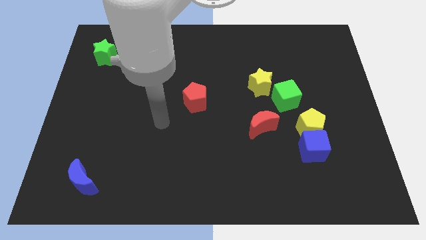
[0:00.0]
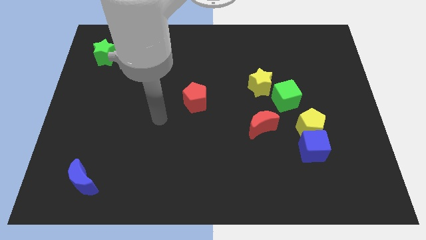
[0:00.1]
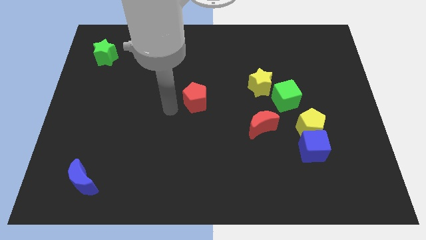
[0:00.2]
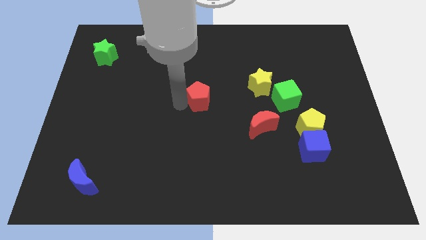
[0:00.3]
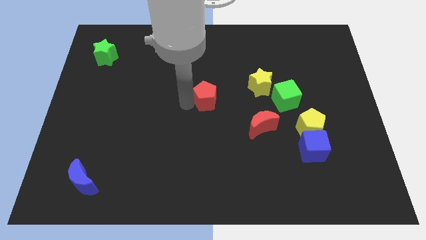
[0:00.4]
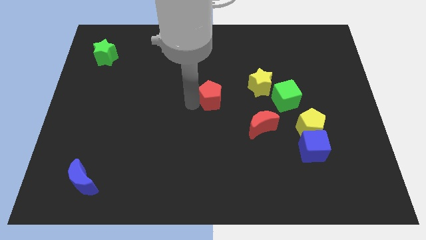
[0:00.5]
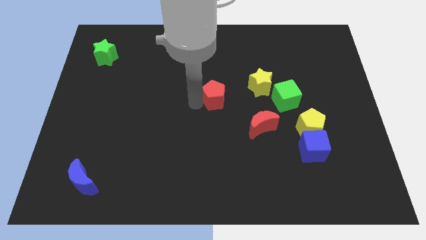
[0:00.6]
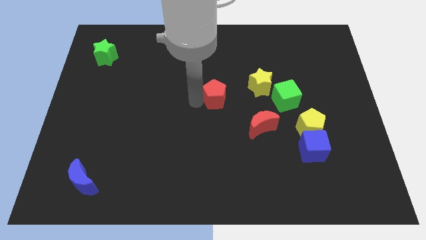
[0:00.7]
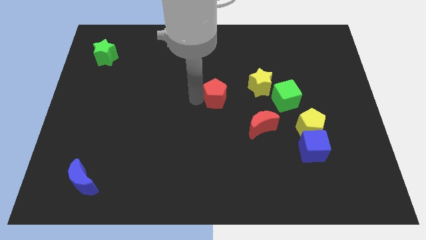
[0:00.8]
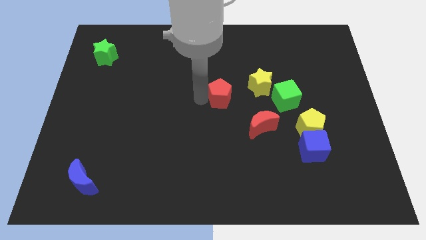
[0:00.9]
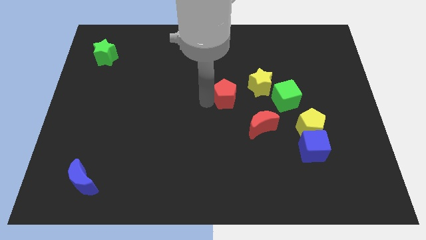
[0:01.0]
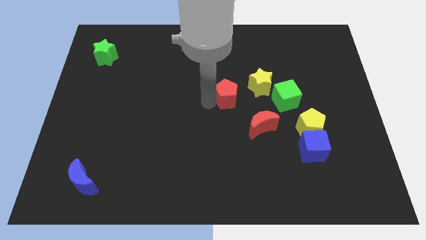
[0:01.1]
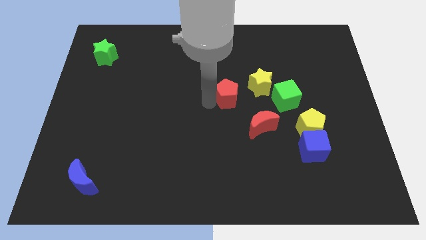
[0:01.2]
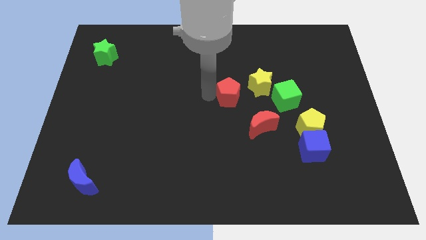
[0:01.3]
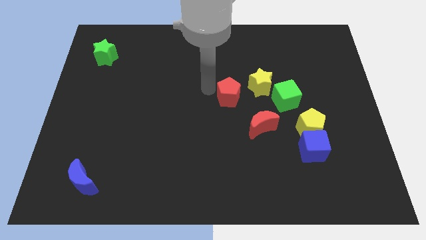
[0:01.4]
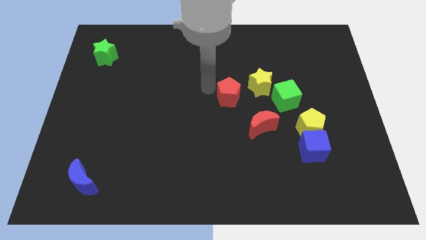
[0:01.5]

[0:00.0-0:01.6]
place the red pentagon to the left side of the yellow star

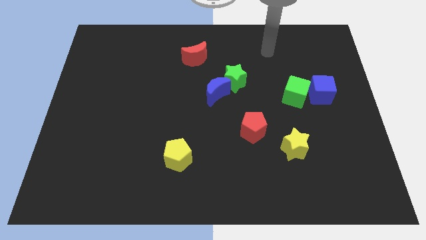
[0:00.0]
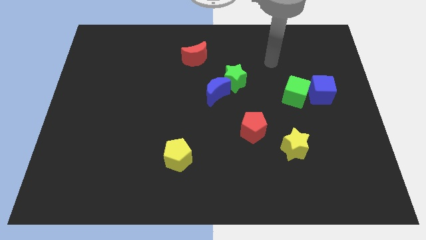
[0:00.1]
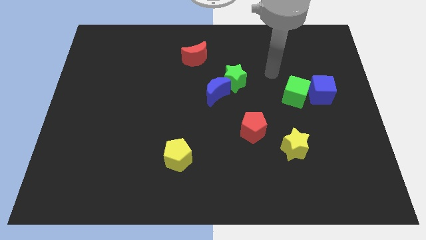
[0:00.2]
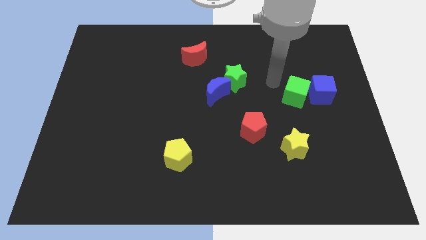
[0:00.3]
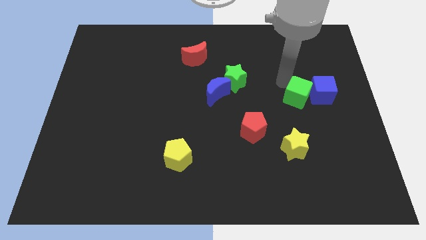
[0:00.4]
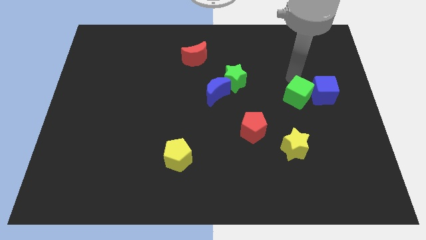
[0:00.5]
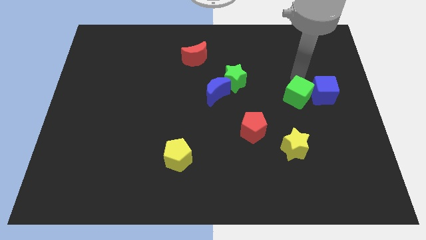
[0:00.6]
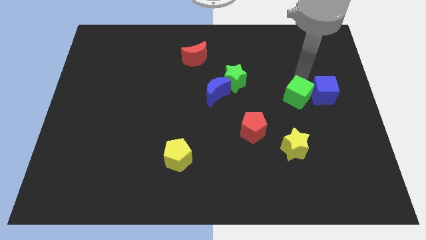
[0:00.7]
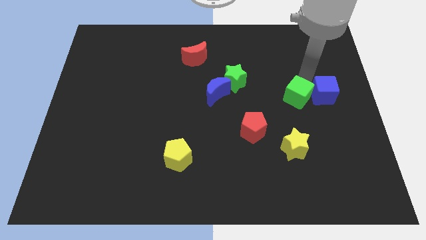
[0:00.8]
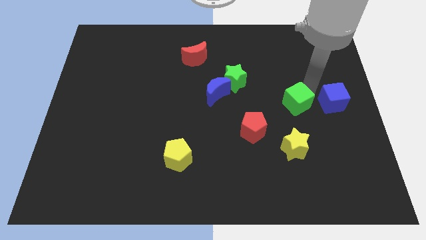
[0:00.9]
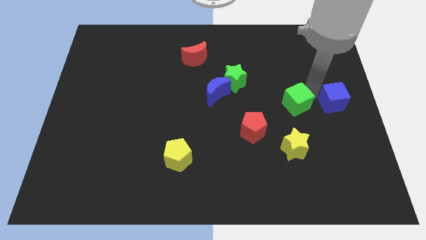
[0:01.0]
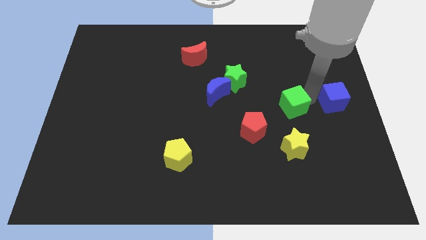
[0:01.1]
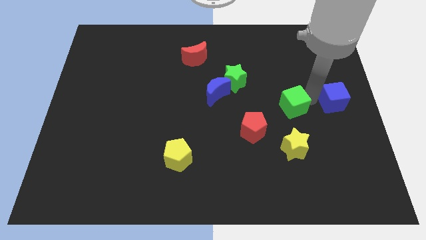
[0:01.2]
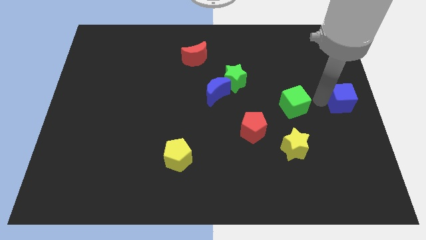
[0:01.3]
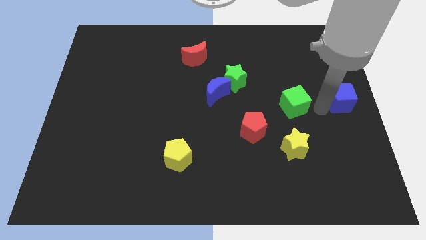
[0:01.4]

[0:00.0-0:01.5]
separate the green and blue cubes from each other

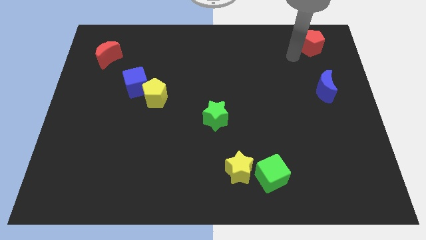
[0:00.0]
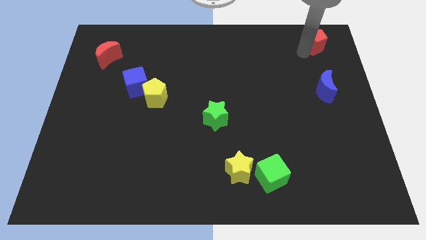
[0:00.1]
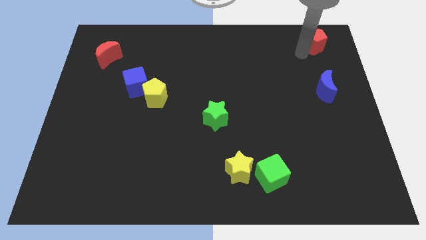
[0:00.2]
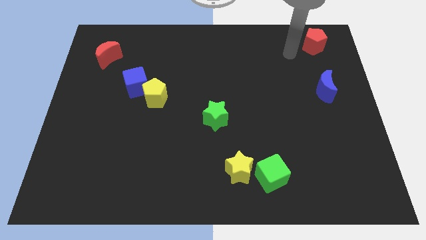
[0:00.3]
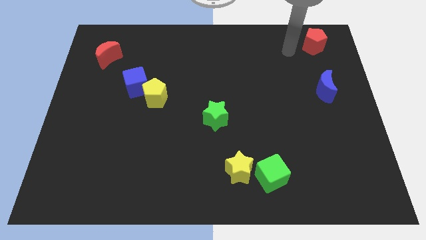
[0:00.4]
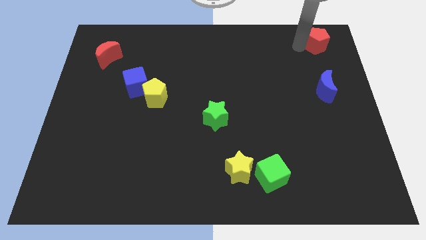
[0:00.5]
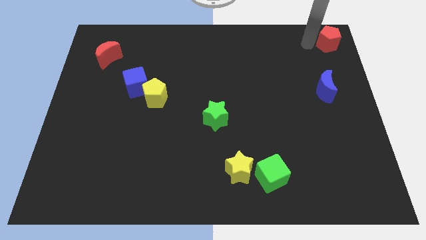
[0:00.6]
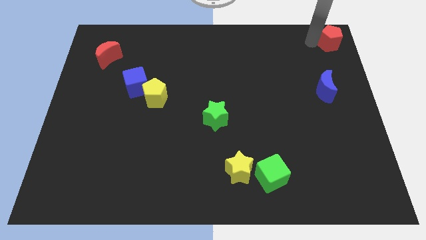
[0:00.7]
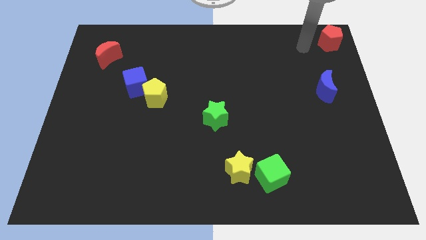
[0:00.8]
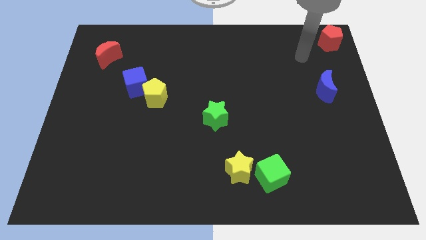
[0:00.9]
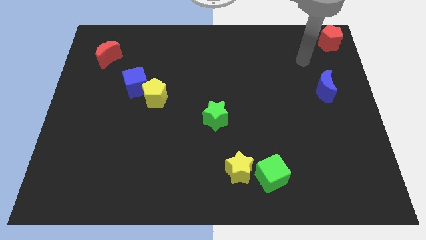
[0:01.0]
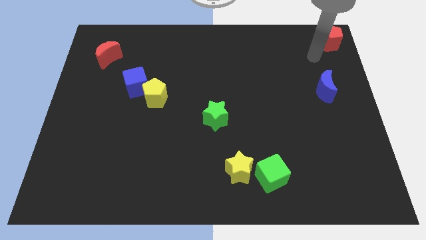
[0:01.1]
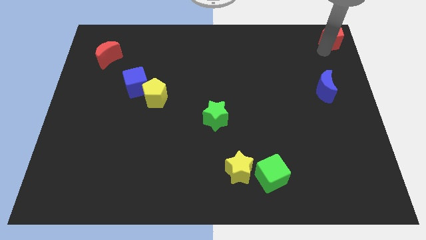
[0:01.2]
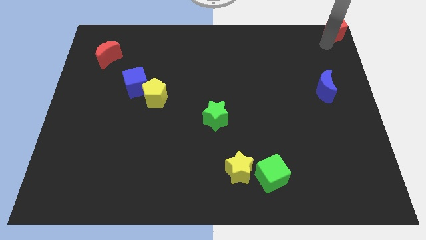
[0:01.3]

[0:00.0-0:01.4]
move the red pentagon to the top right corner of the board

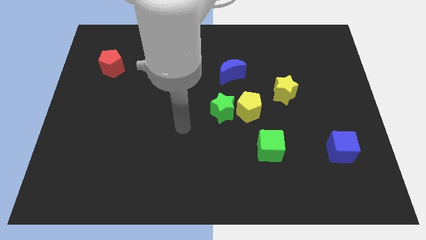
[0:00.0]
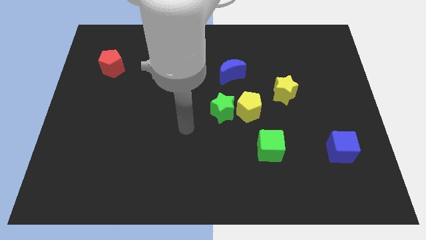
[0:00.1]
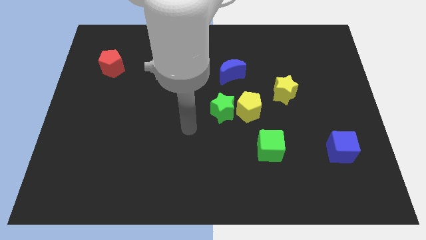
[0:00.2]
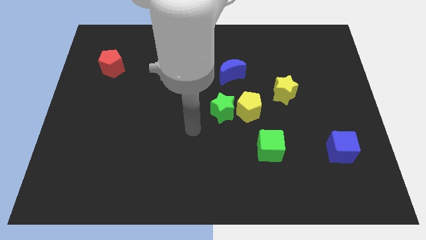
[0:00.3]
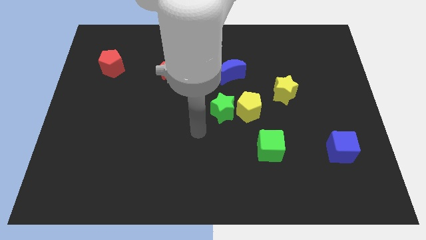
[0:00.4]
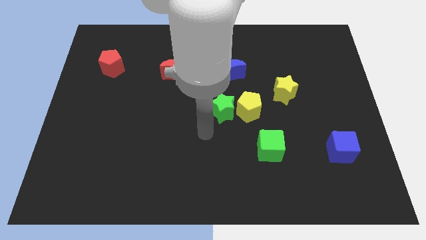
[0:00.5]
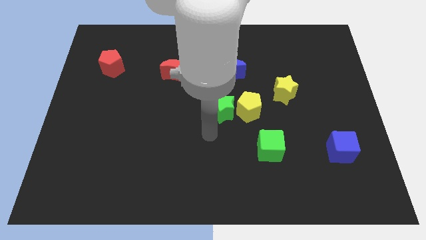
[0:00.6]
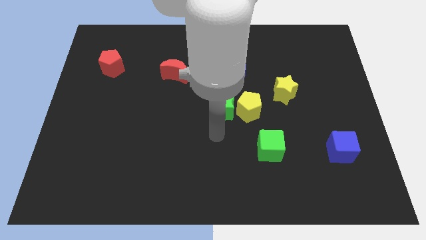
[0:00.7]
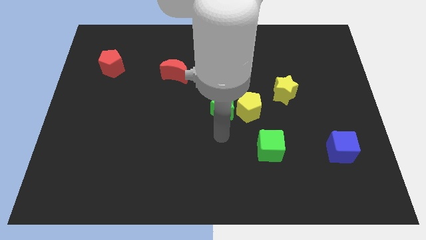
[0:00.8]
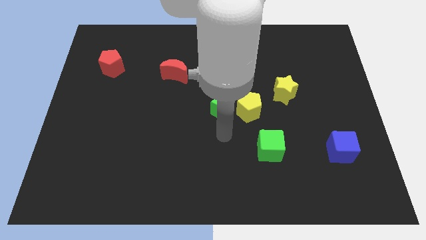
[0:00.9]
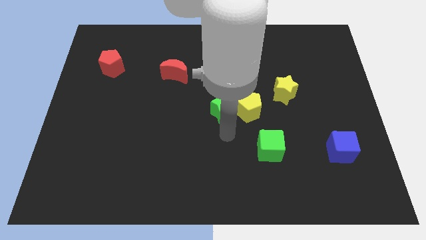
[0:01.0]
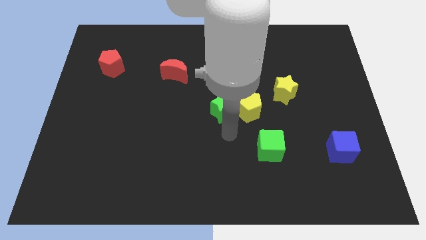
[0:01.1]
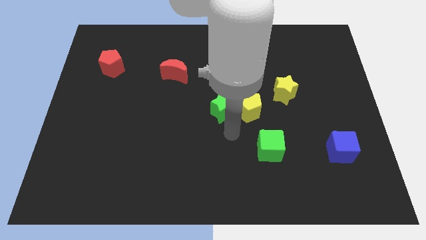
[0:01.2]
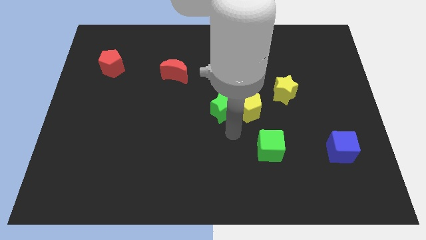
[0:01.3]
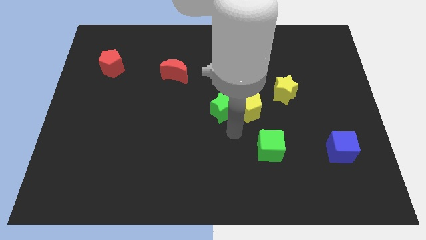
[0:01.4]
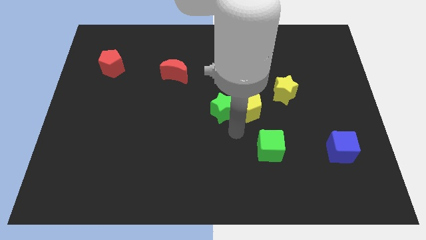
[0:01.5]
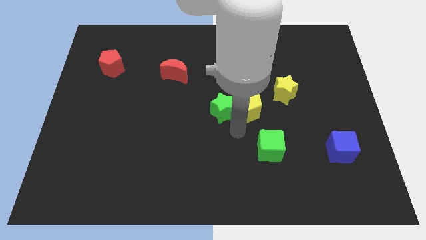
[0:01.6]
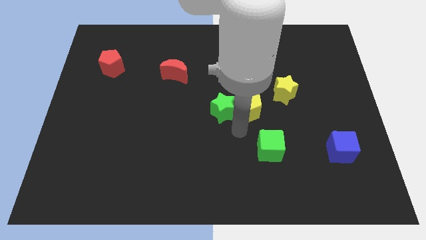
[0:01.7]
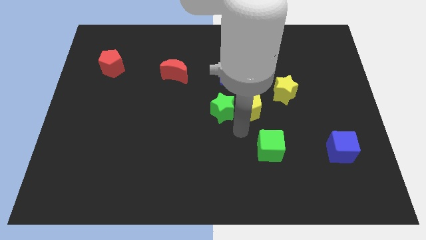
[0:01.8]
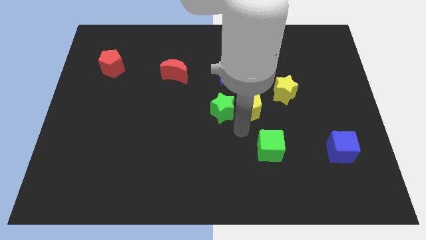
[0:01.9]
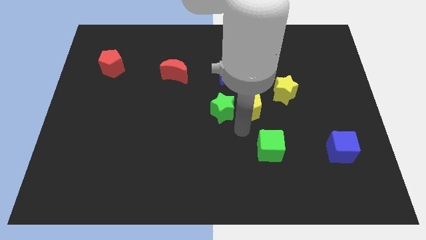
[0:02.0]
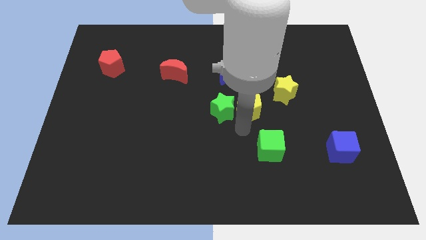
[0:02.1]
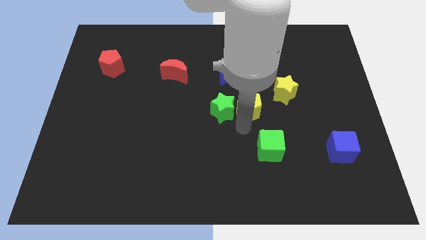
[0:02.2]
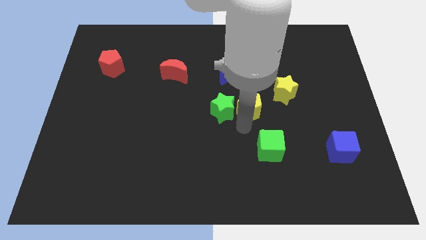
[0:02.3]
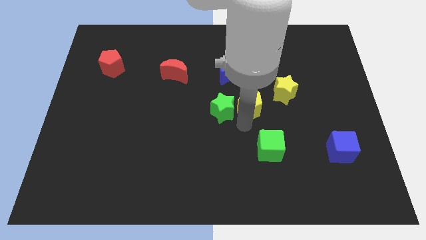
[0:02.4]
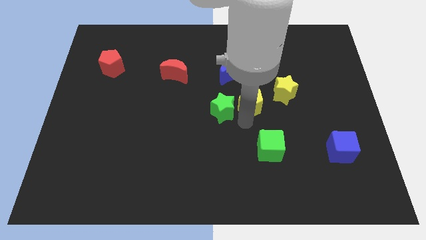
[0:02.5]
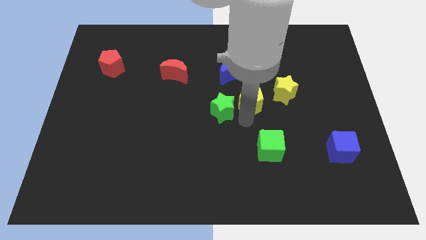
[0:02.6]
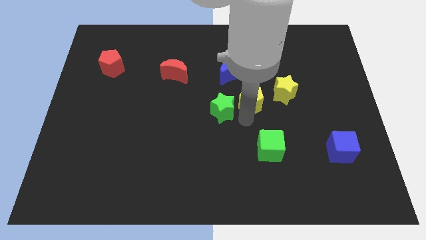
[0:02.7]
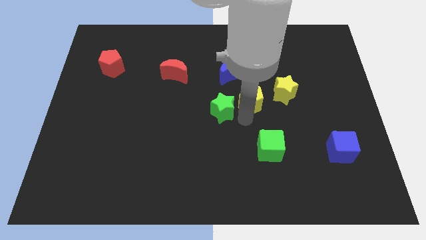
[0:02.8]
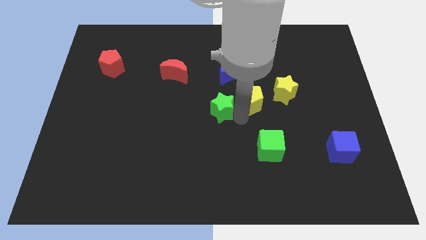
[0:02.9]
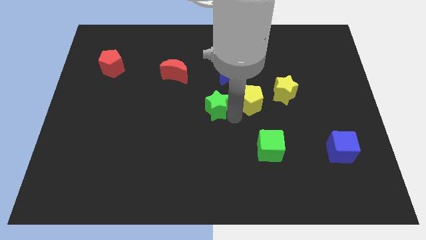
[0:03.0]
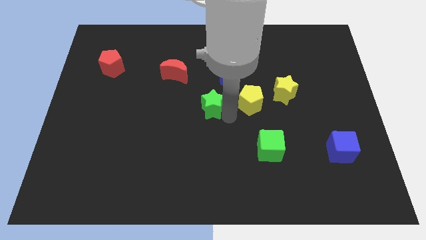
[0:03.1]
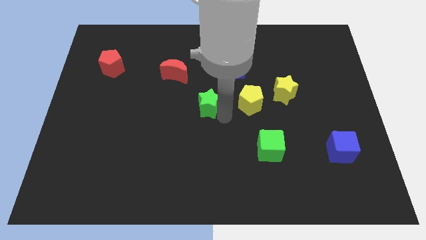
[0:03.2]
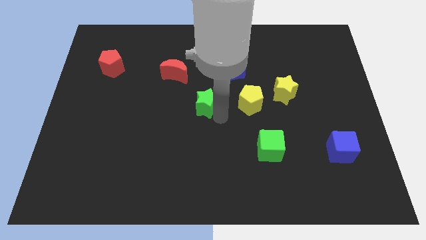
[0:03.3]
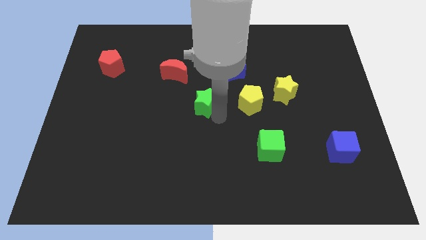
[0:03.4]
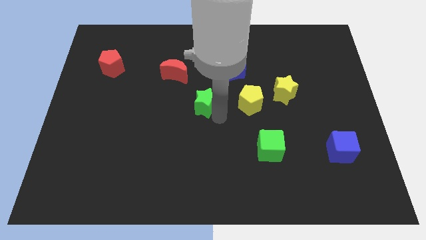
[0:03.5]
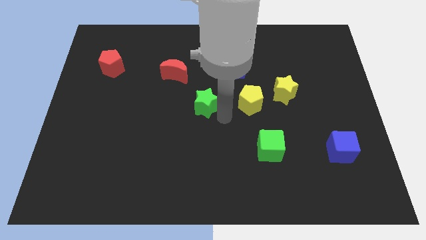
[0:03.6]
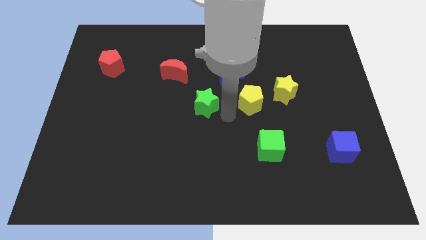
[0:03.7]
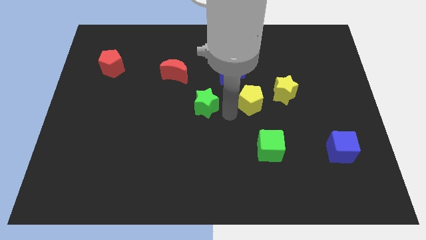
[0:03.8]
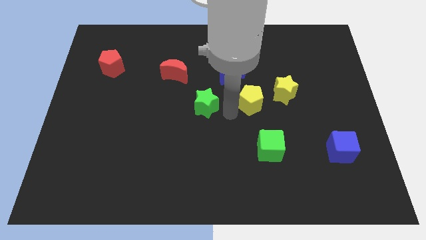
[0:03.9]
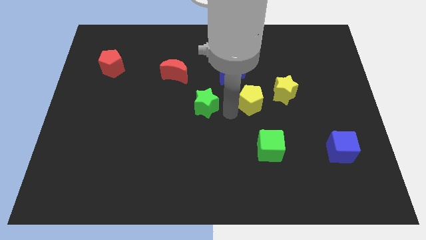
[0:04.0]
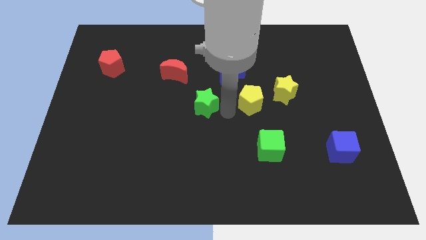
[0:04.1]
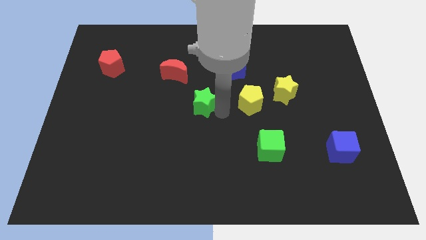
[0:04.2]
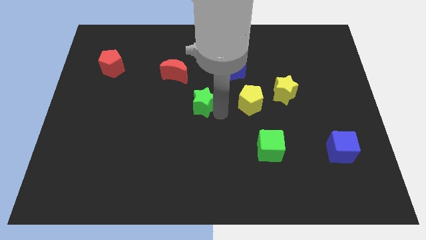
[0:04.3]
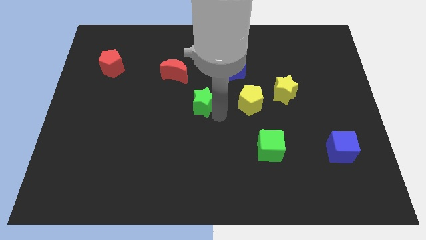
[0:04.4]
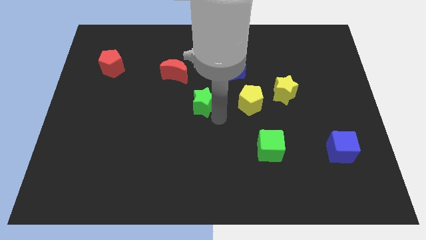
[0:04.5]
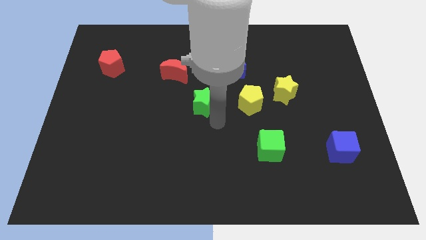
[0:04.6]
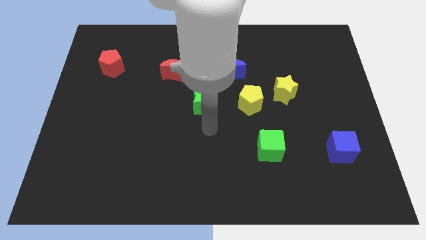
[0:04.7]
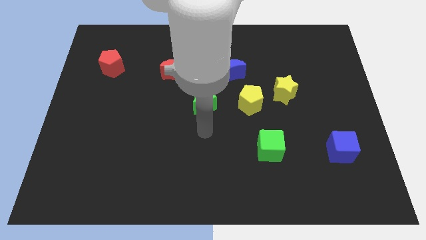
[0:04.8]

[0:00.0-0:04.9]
separate the green star and yellow pentagon
